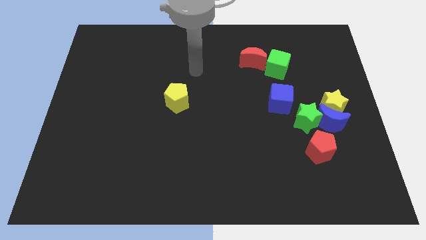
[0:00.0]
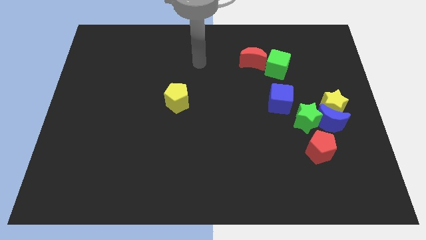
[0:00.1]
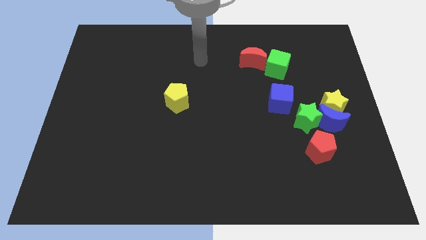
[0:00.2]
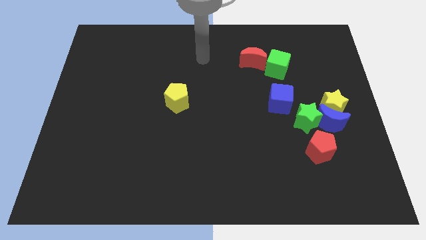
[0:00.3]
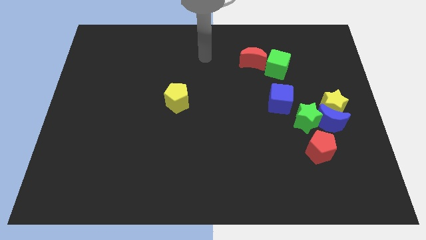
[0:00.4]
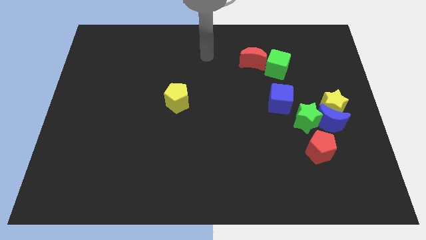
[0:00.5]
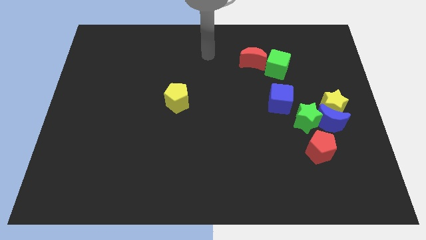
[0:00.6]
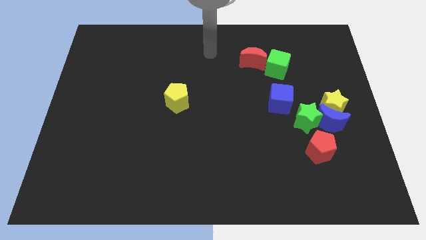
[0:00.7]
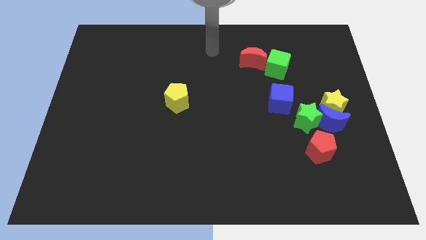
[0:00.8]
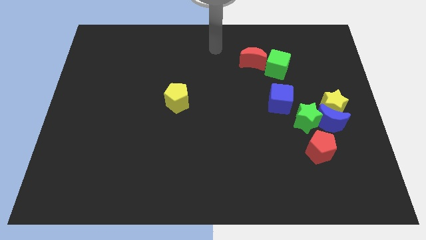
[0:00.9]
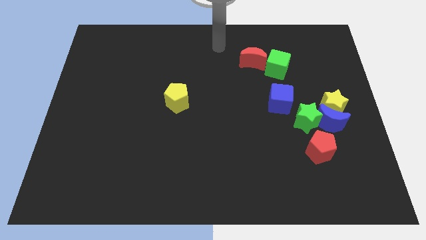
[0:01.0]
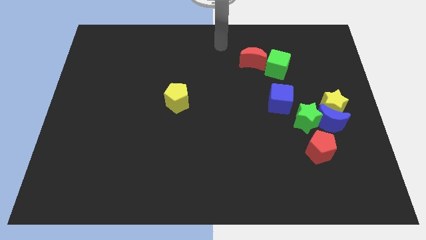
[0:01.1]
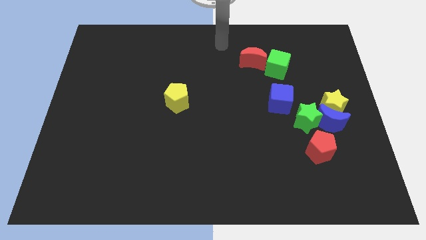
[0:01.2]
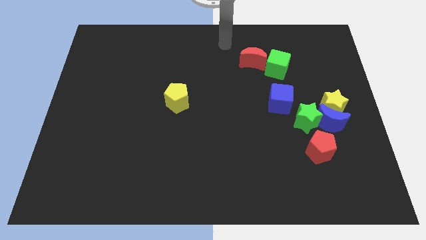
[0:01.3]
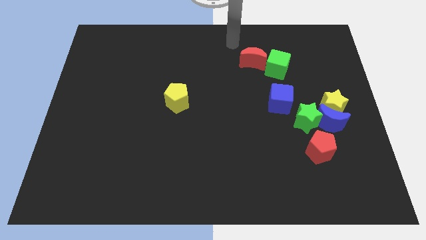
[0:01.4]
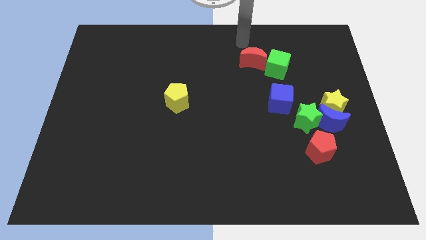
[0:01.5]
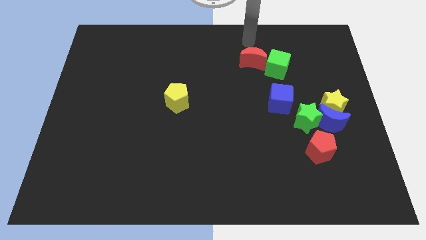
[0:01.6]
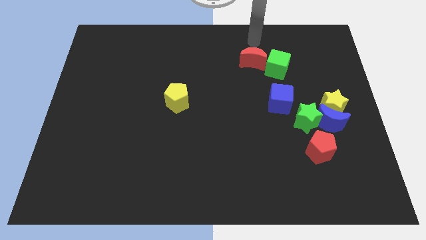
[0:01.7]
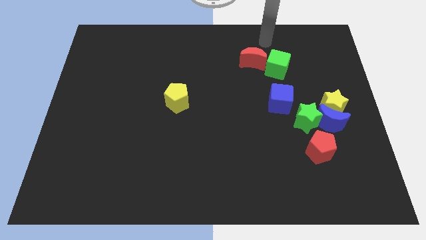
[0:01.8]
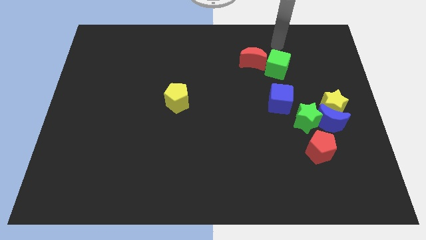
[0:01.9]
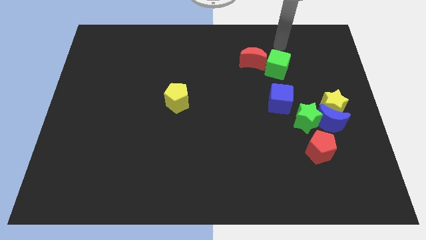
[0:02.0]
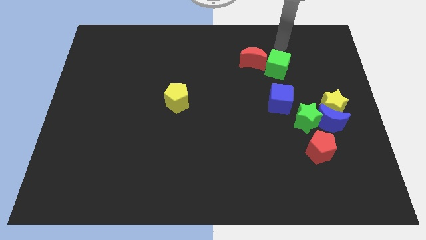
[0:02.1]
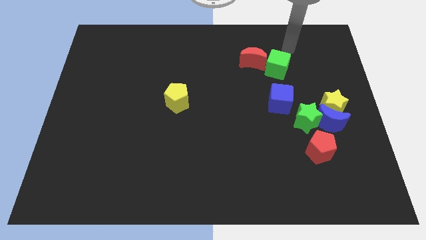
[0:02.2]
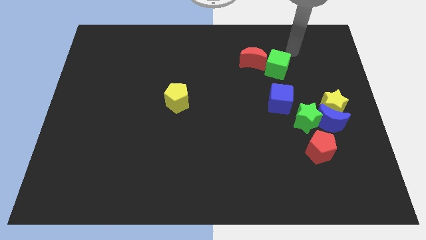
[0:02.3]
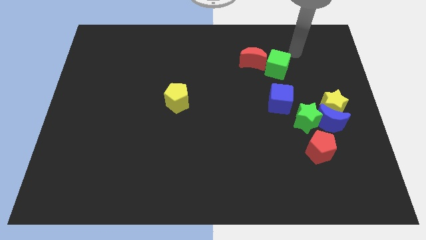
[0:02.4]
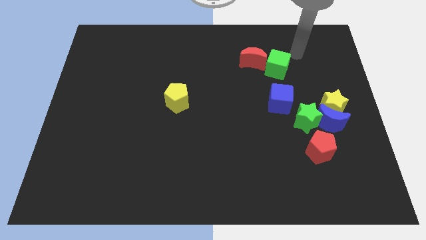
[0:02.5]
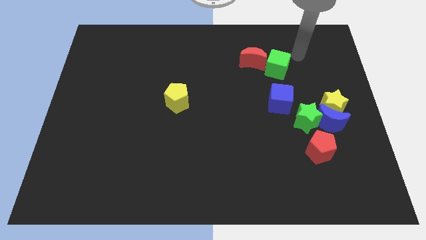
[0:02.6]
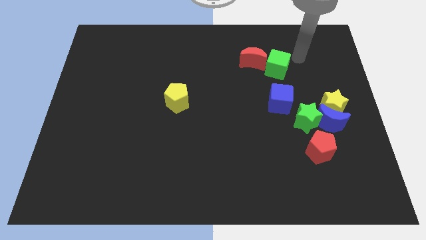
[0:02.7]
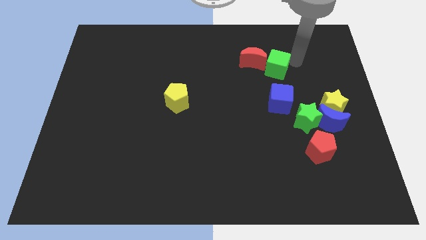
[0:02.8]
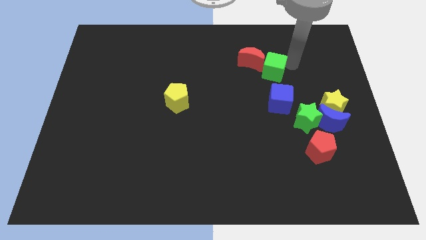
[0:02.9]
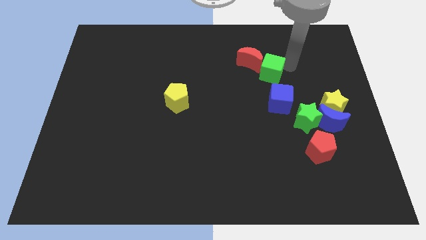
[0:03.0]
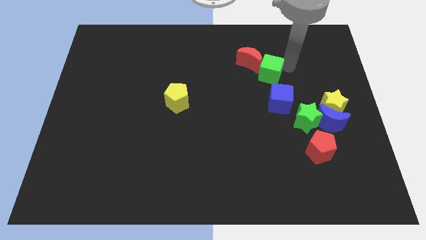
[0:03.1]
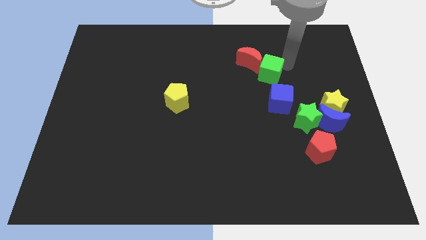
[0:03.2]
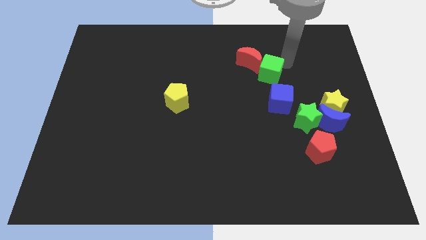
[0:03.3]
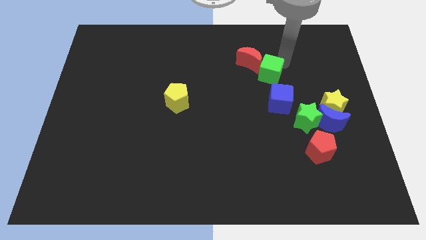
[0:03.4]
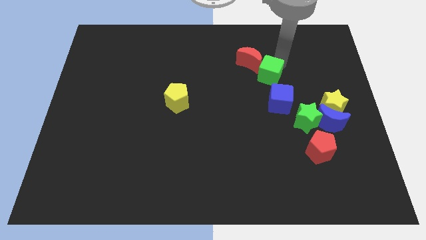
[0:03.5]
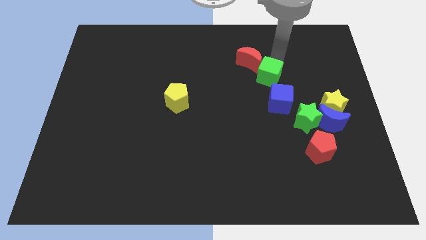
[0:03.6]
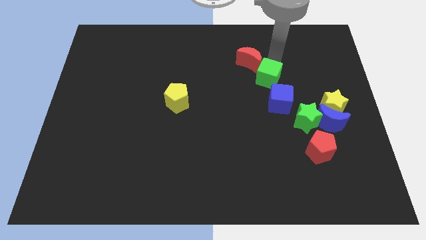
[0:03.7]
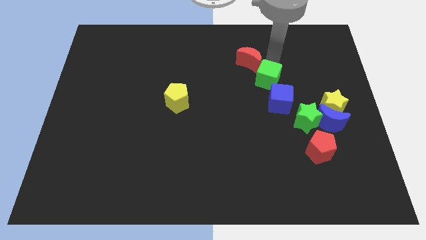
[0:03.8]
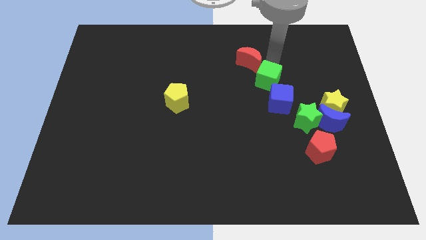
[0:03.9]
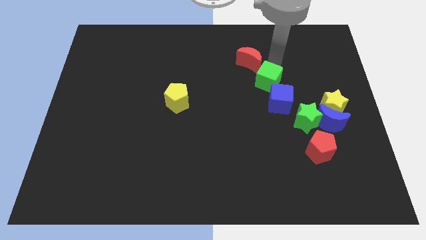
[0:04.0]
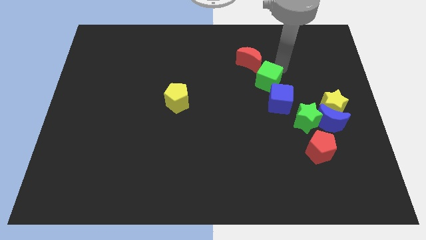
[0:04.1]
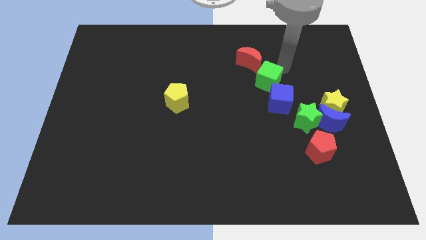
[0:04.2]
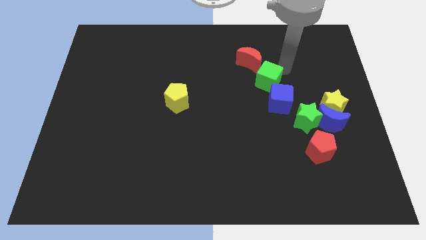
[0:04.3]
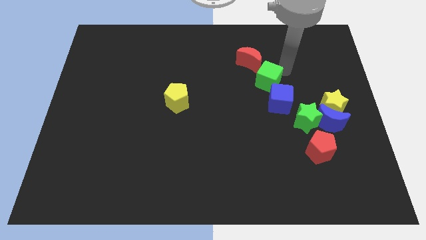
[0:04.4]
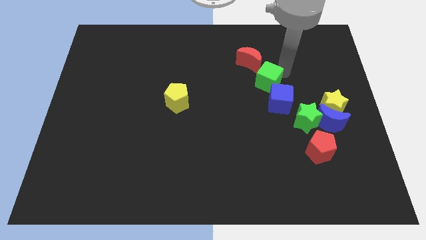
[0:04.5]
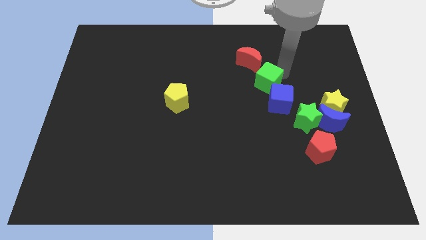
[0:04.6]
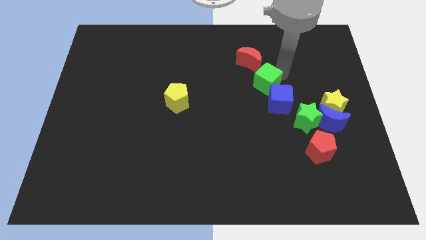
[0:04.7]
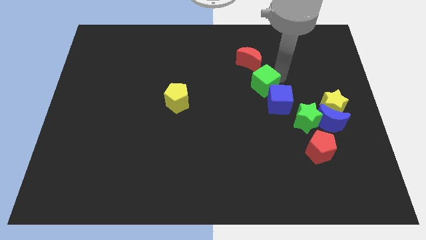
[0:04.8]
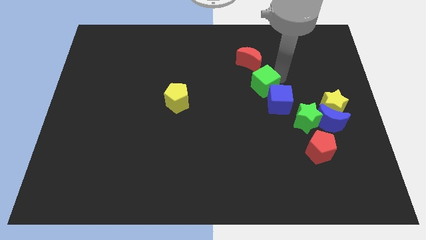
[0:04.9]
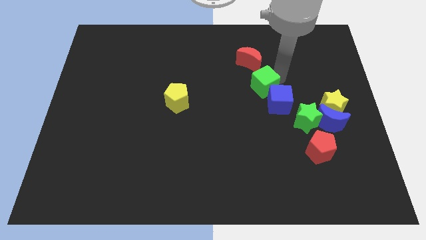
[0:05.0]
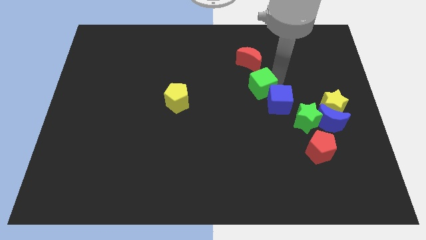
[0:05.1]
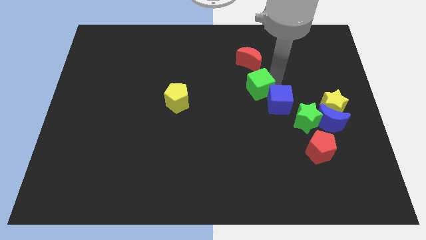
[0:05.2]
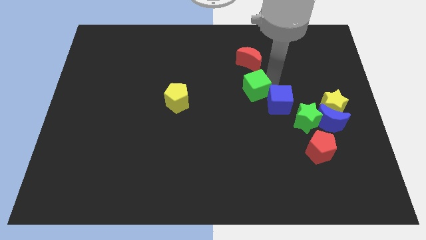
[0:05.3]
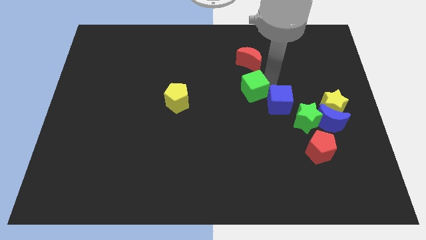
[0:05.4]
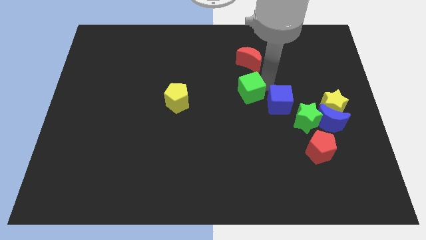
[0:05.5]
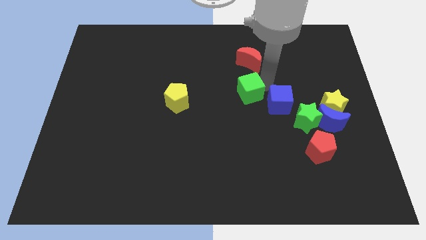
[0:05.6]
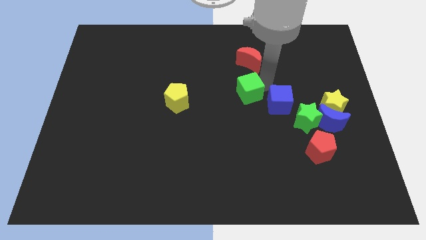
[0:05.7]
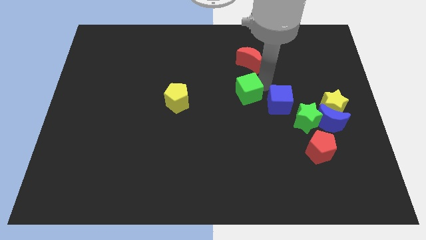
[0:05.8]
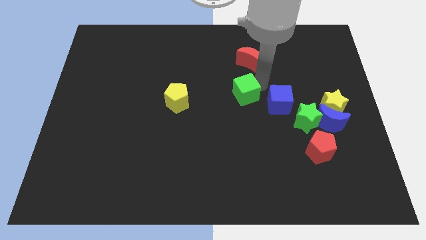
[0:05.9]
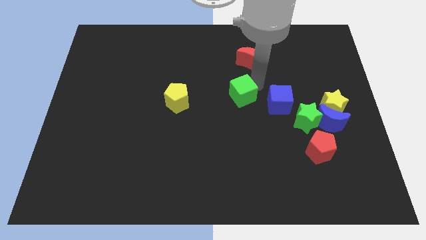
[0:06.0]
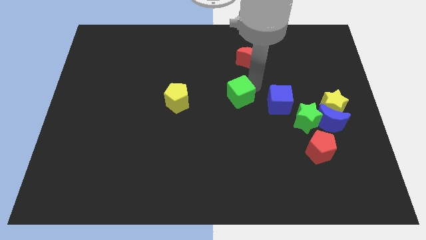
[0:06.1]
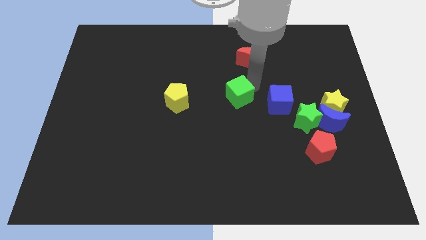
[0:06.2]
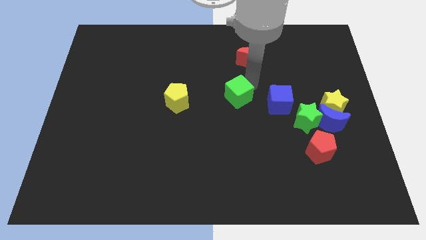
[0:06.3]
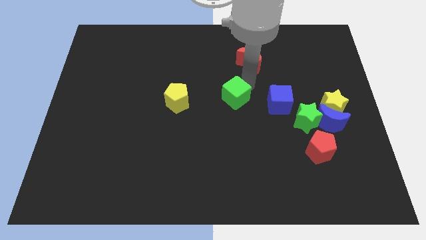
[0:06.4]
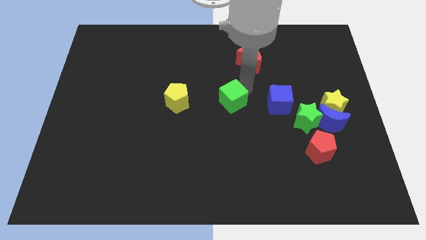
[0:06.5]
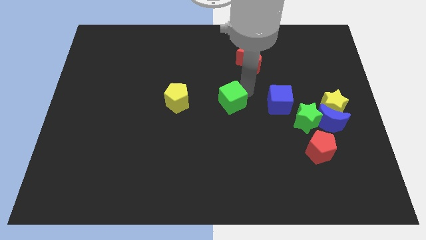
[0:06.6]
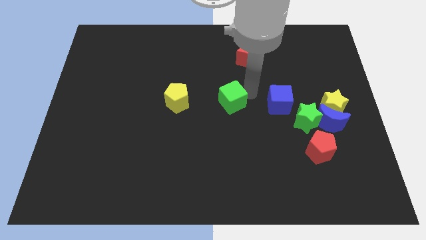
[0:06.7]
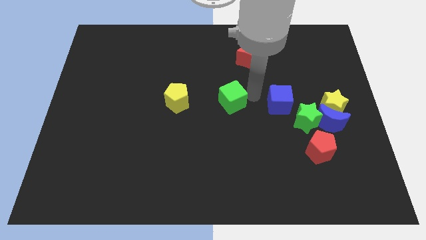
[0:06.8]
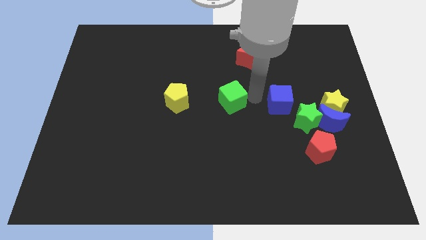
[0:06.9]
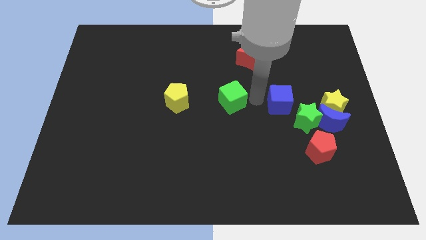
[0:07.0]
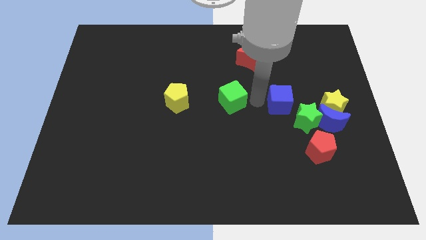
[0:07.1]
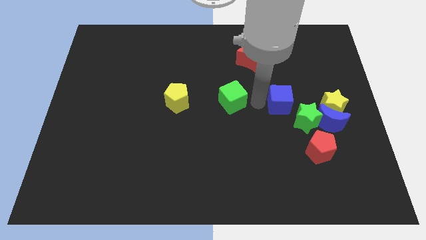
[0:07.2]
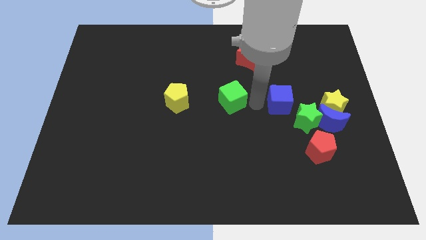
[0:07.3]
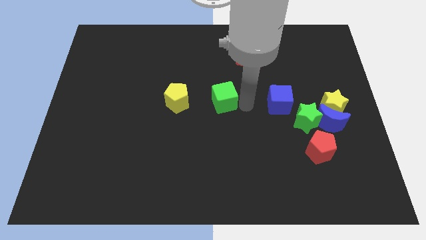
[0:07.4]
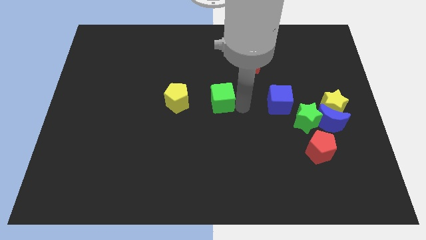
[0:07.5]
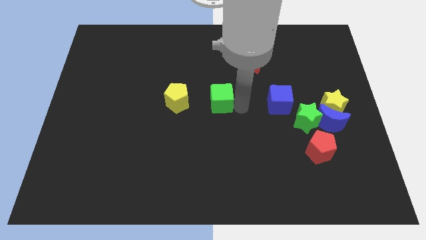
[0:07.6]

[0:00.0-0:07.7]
move the green cube to the center of the board

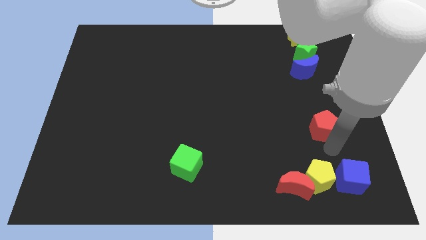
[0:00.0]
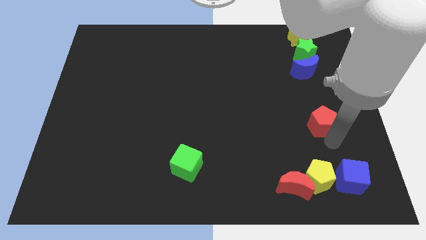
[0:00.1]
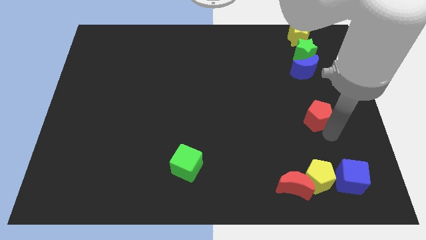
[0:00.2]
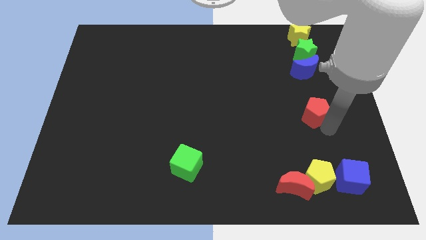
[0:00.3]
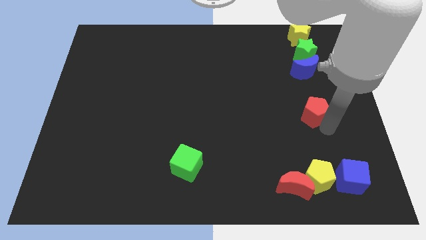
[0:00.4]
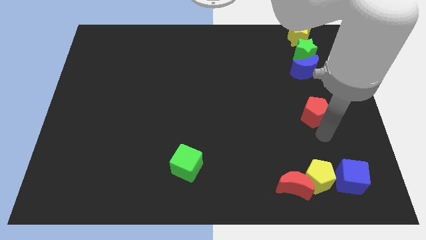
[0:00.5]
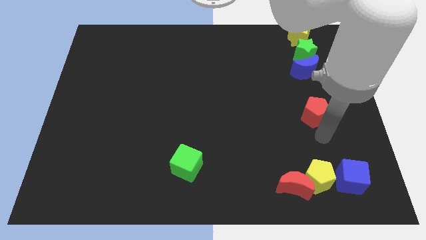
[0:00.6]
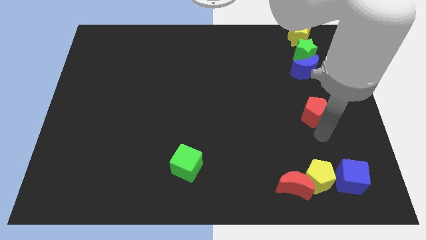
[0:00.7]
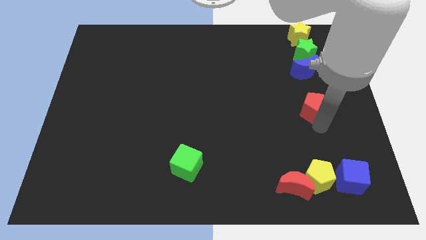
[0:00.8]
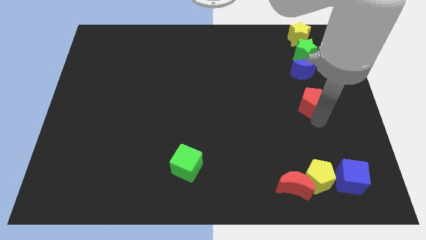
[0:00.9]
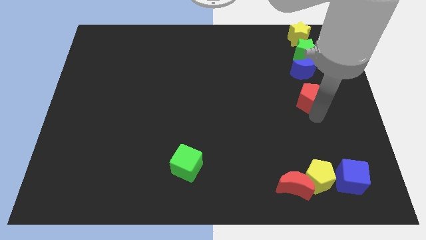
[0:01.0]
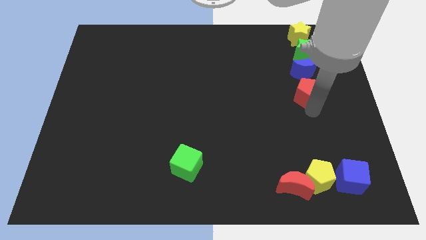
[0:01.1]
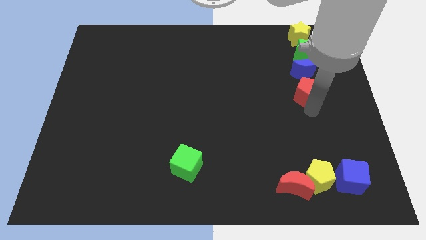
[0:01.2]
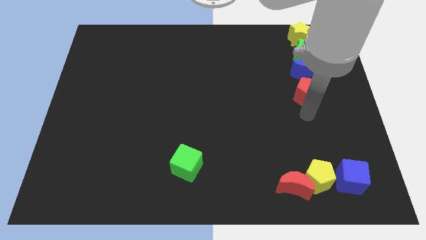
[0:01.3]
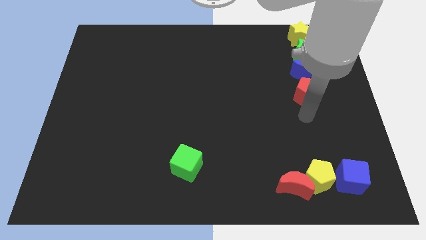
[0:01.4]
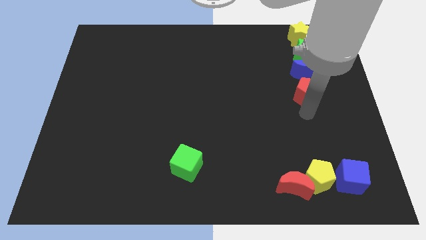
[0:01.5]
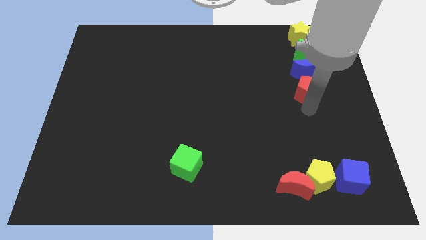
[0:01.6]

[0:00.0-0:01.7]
place red pentagon below blue moon
